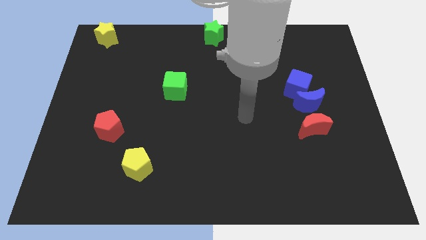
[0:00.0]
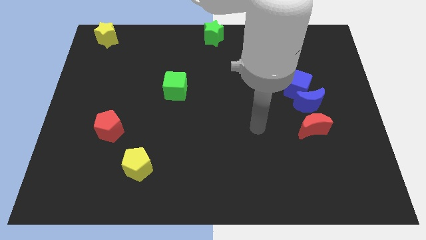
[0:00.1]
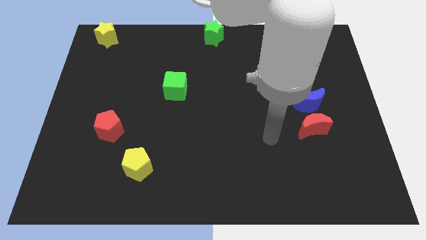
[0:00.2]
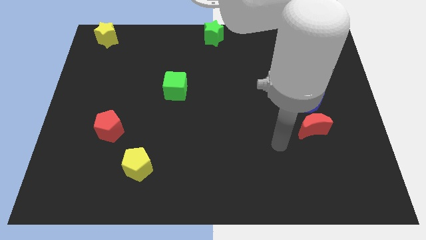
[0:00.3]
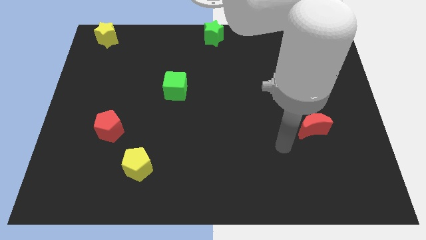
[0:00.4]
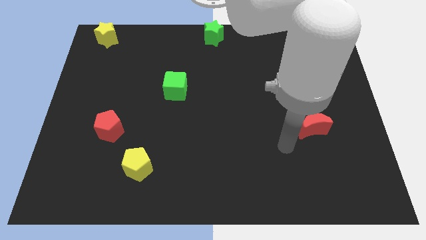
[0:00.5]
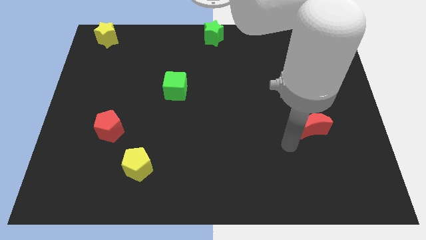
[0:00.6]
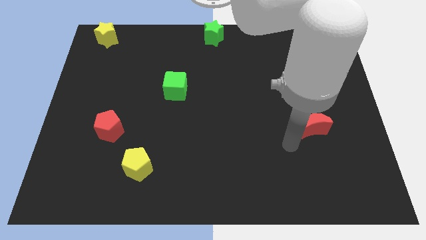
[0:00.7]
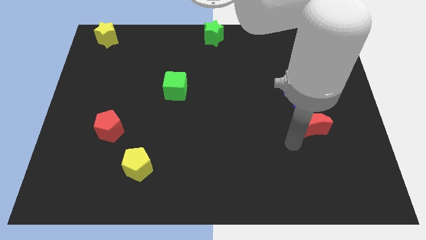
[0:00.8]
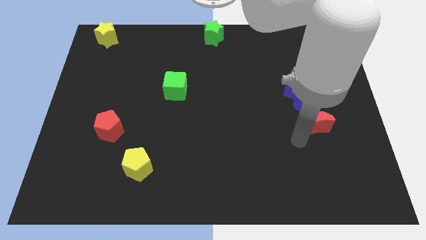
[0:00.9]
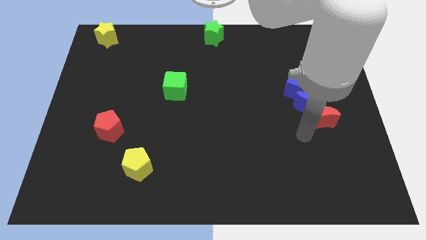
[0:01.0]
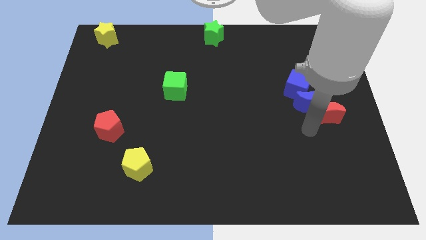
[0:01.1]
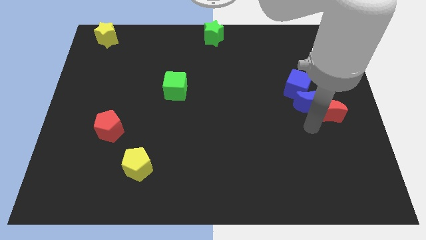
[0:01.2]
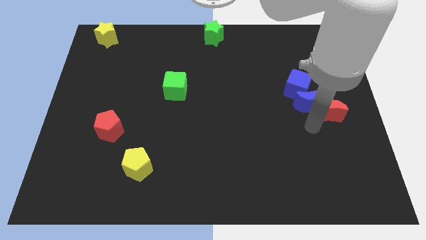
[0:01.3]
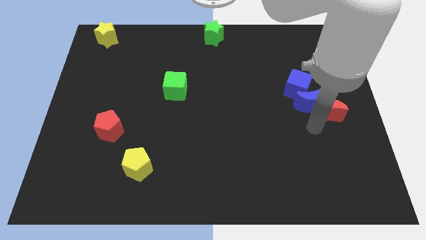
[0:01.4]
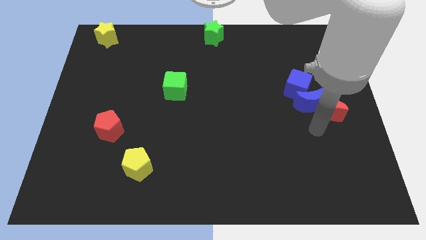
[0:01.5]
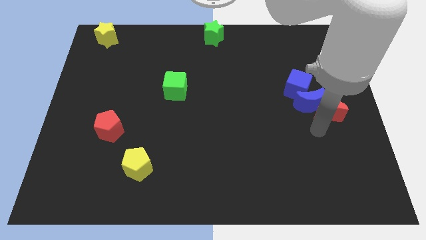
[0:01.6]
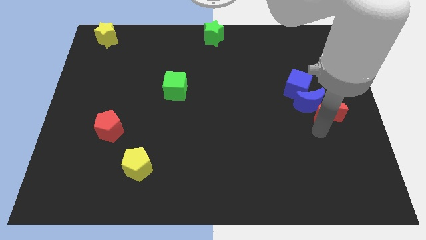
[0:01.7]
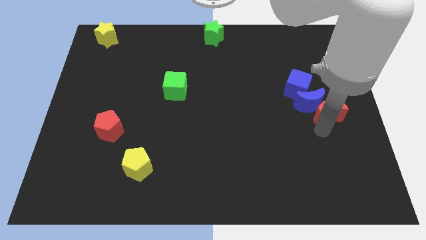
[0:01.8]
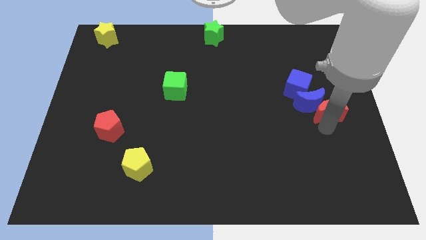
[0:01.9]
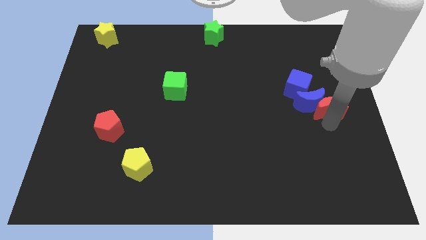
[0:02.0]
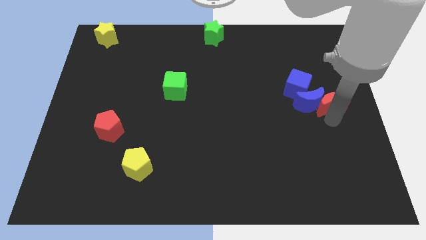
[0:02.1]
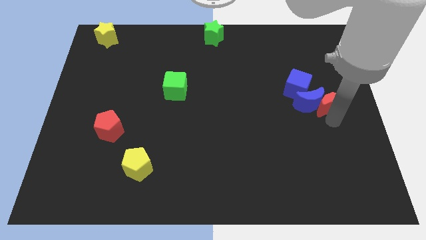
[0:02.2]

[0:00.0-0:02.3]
push the red moon into the blue moon

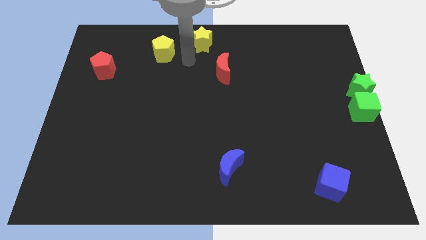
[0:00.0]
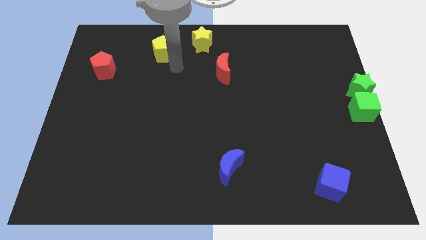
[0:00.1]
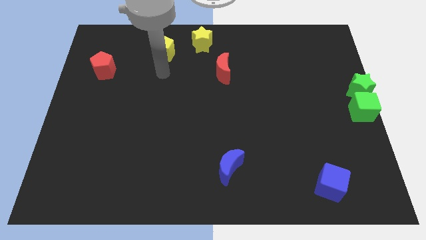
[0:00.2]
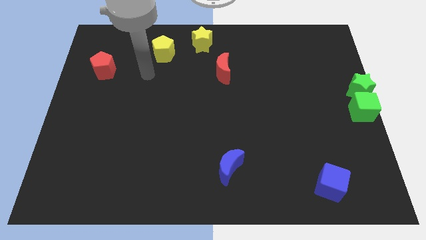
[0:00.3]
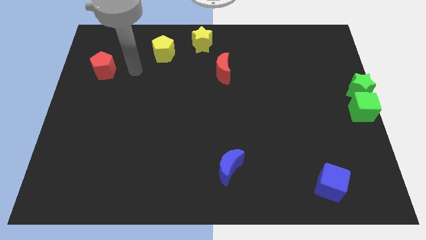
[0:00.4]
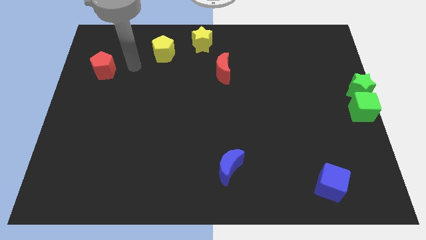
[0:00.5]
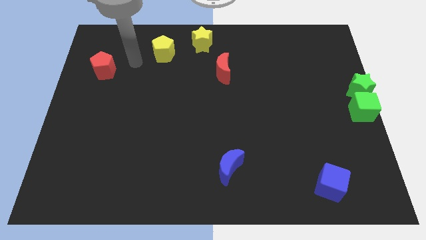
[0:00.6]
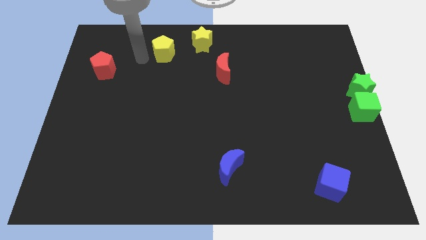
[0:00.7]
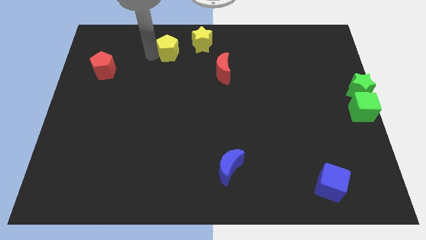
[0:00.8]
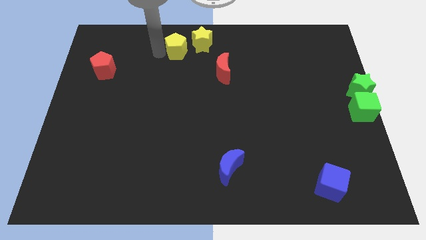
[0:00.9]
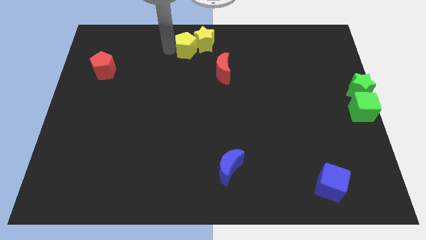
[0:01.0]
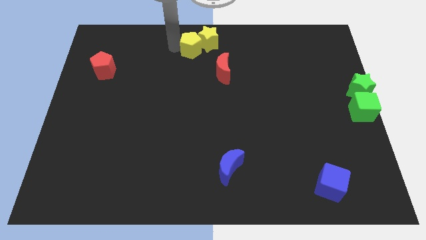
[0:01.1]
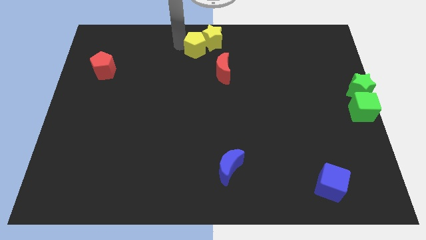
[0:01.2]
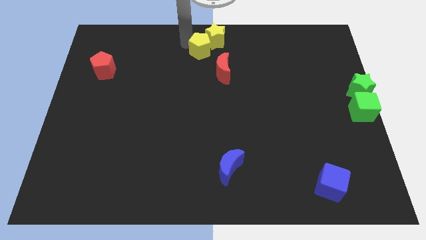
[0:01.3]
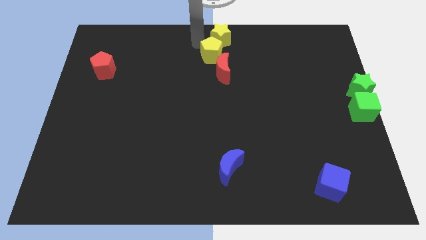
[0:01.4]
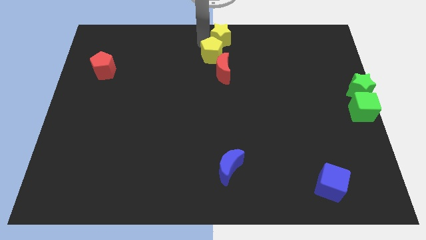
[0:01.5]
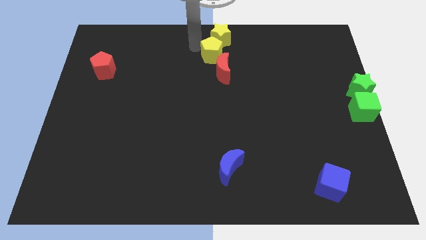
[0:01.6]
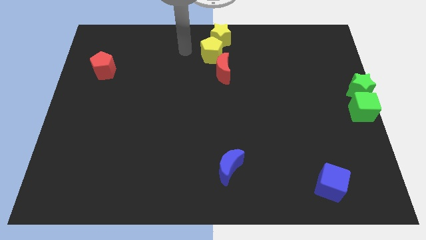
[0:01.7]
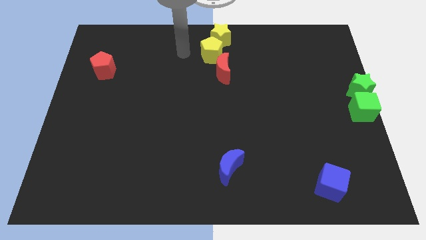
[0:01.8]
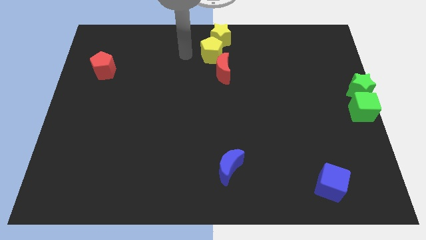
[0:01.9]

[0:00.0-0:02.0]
move yellow pentagon to the top center of the yellow star

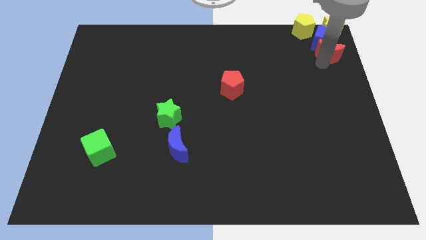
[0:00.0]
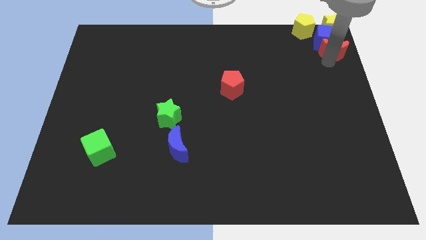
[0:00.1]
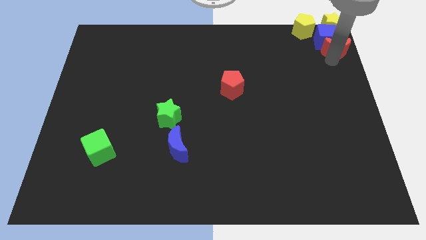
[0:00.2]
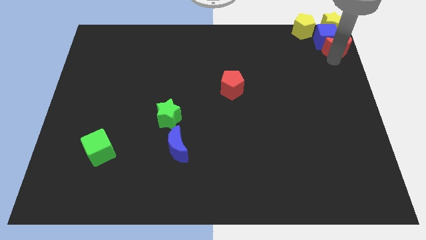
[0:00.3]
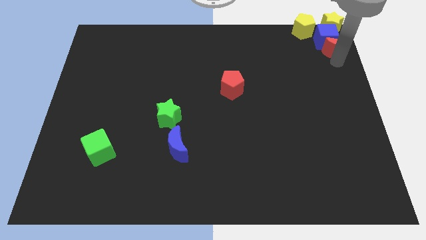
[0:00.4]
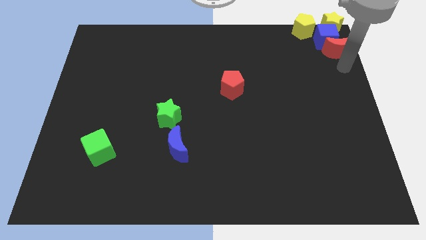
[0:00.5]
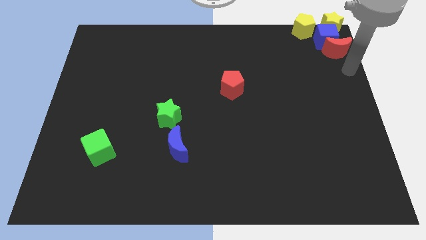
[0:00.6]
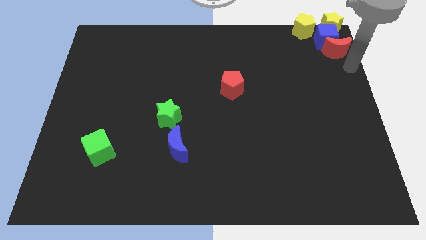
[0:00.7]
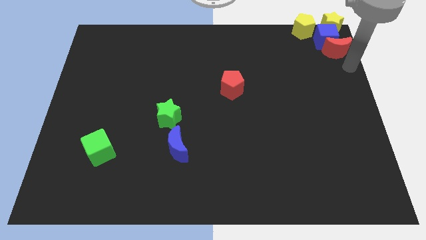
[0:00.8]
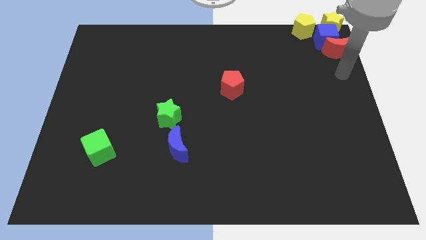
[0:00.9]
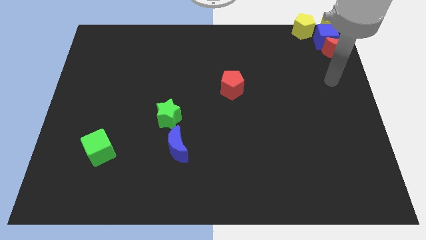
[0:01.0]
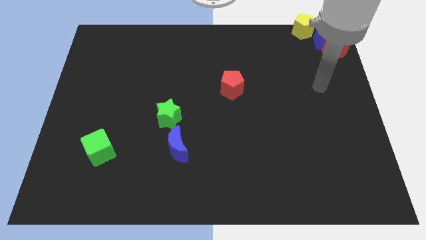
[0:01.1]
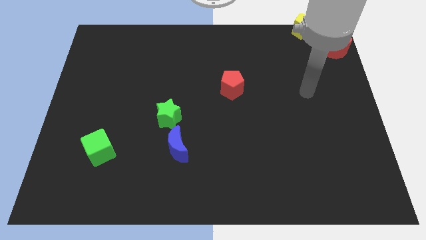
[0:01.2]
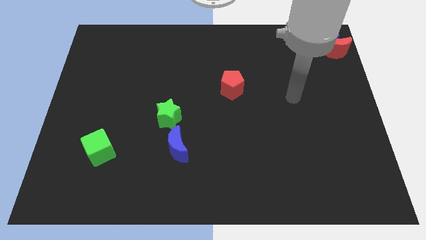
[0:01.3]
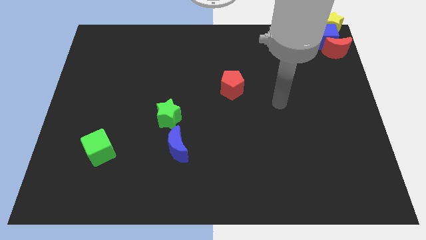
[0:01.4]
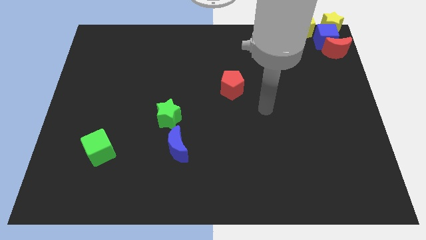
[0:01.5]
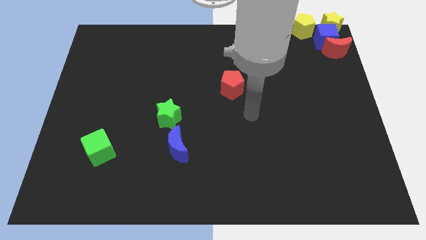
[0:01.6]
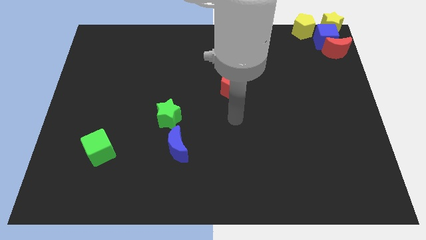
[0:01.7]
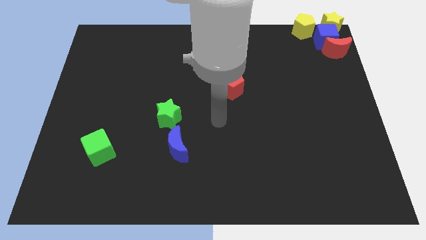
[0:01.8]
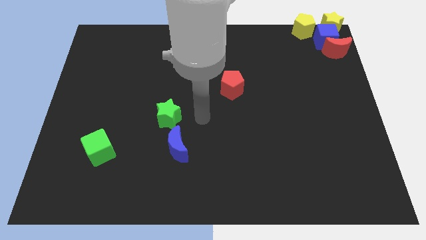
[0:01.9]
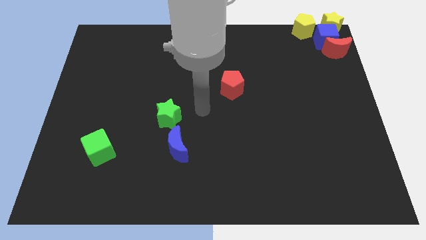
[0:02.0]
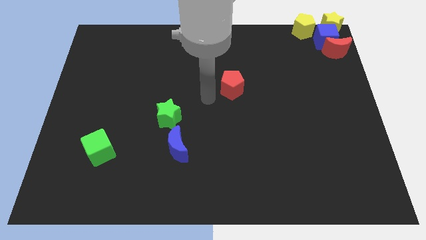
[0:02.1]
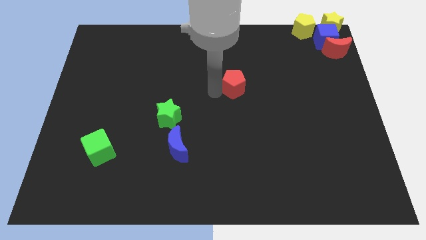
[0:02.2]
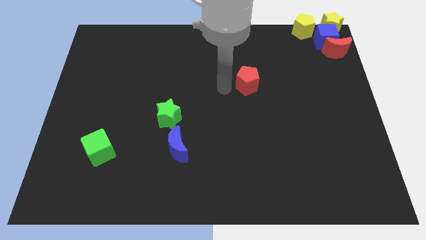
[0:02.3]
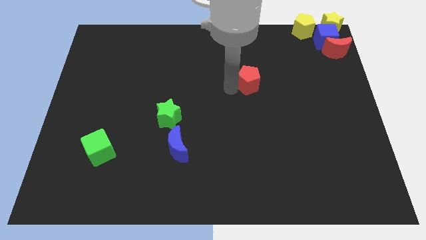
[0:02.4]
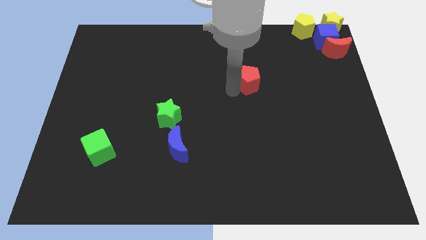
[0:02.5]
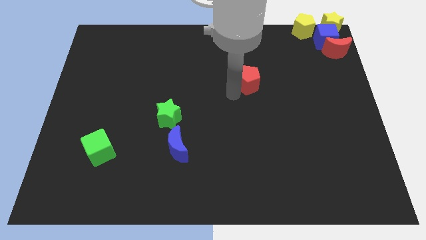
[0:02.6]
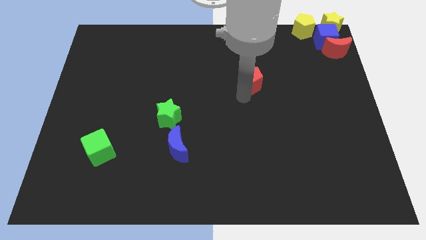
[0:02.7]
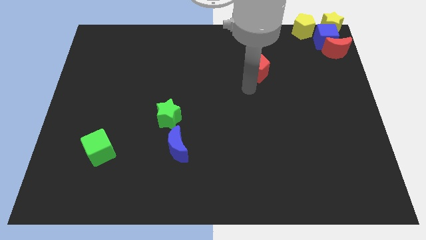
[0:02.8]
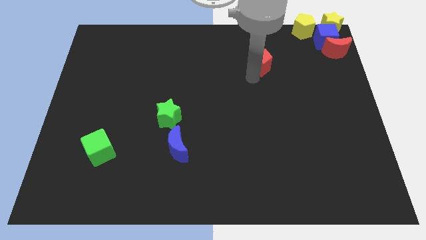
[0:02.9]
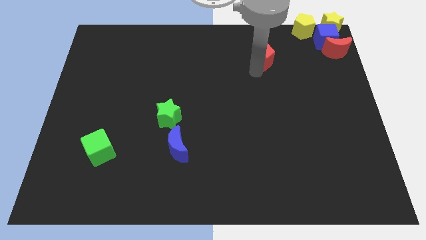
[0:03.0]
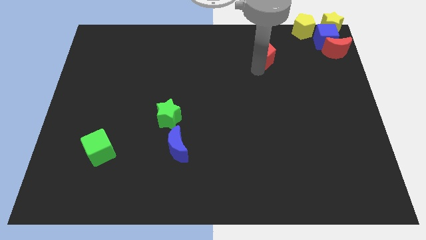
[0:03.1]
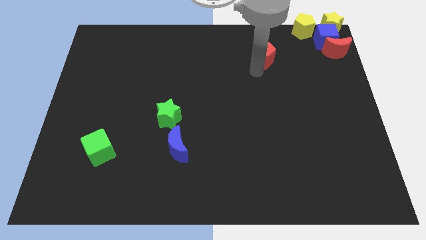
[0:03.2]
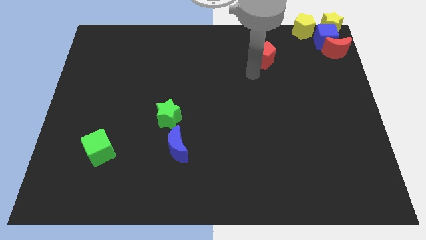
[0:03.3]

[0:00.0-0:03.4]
push the red pentagon diagonally top right to the green star

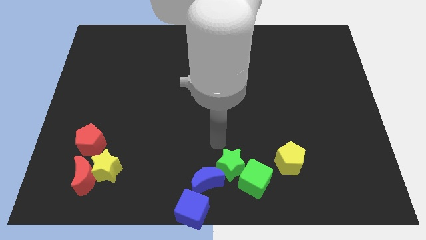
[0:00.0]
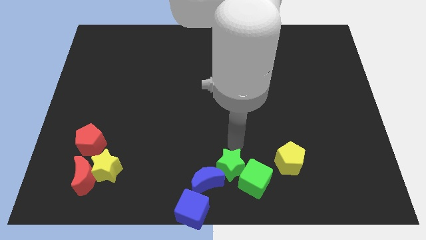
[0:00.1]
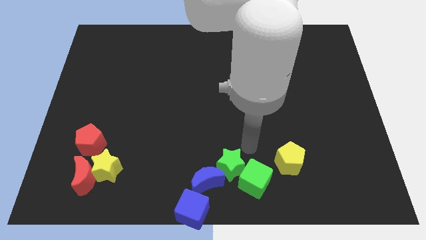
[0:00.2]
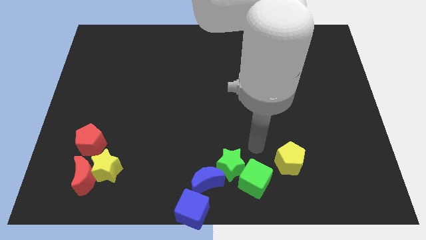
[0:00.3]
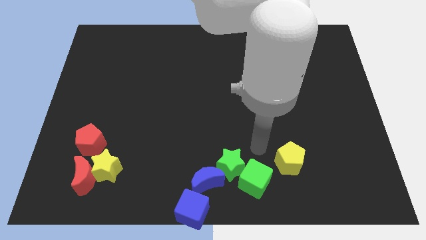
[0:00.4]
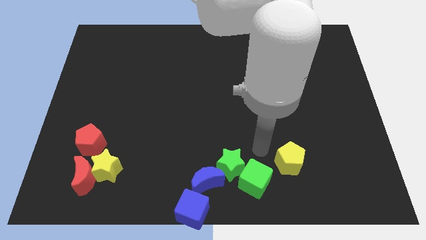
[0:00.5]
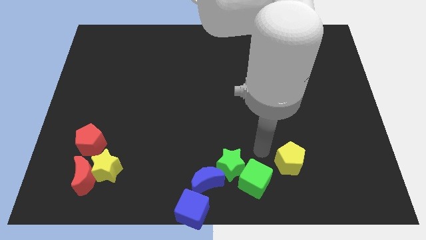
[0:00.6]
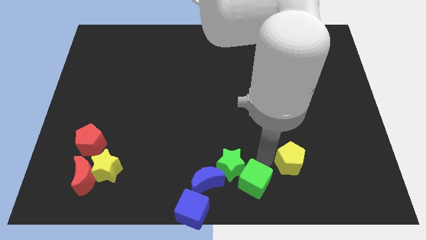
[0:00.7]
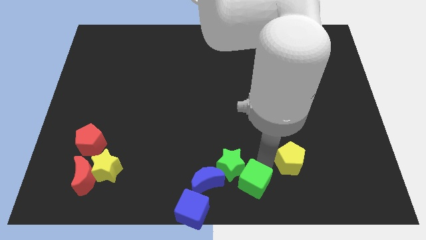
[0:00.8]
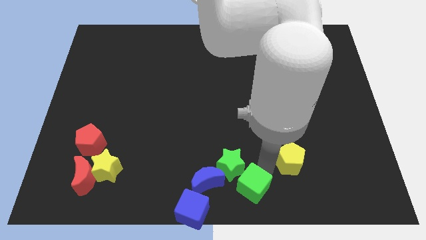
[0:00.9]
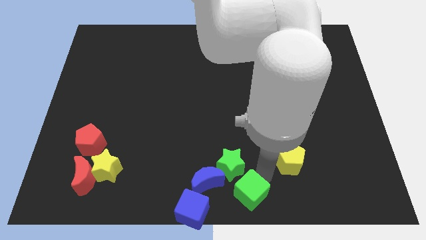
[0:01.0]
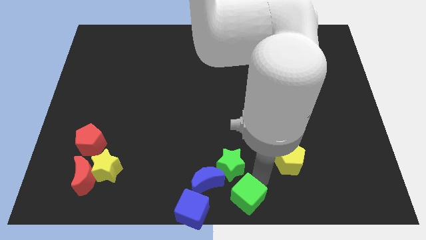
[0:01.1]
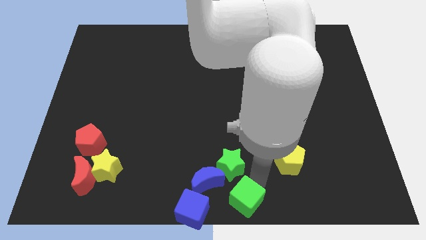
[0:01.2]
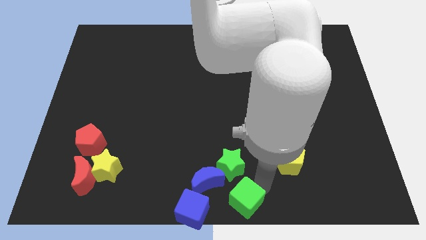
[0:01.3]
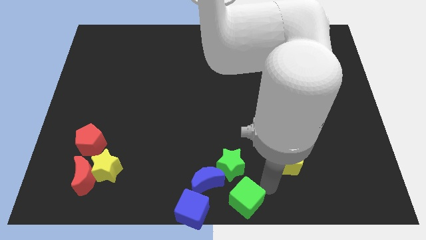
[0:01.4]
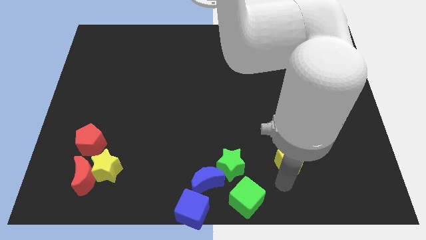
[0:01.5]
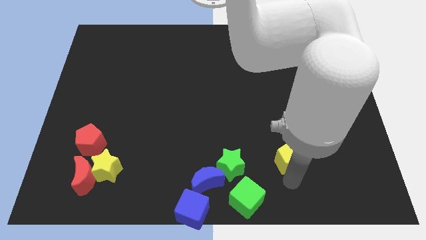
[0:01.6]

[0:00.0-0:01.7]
slide the green cube below to the green star
